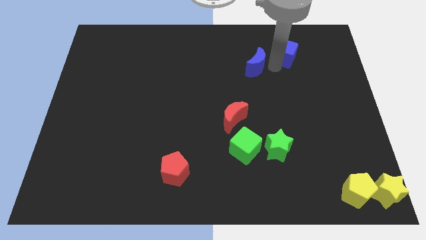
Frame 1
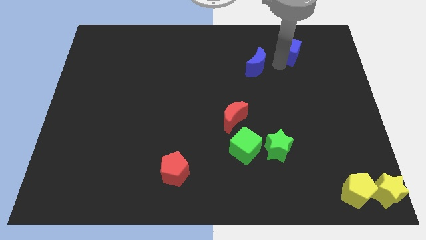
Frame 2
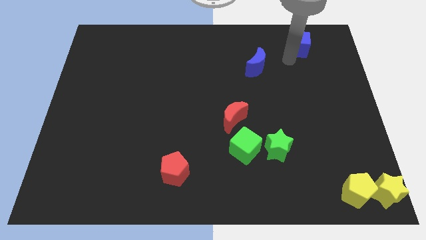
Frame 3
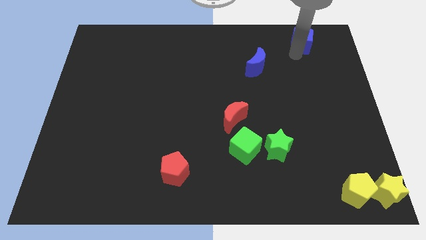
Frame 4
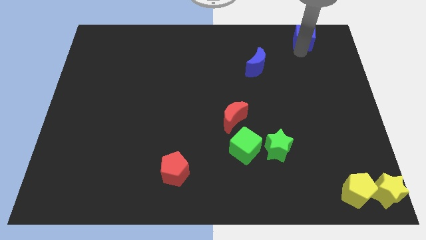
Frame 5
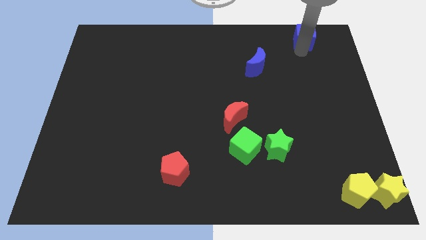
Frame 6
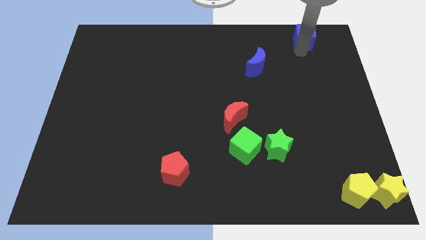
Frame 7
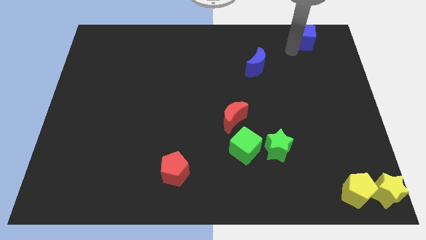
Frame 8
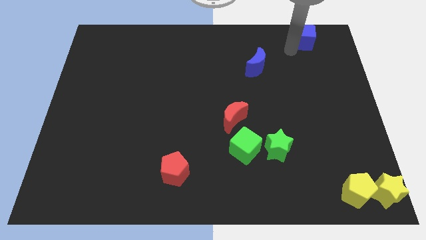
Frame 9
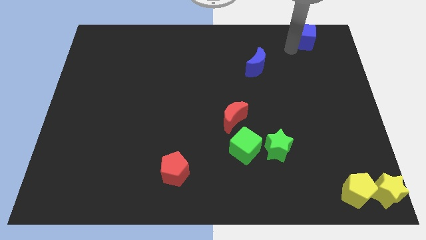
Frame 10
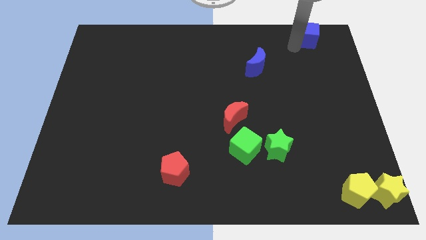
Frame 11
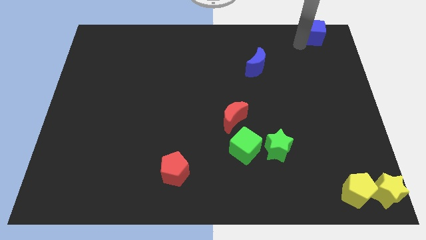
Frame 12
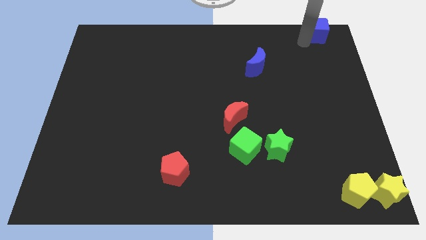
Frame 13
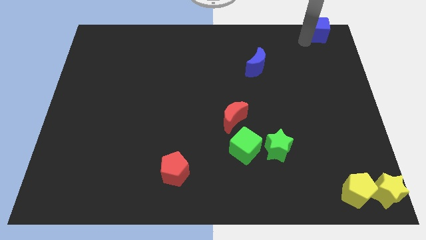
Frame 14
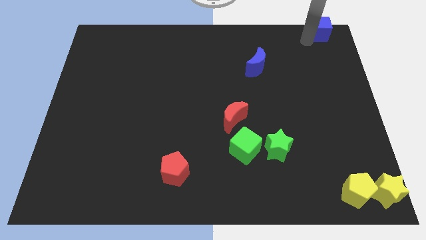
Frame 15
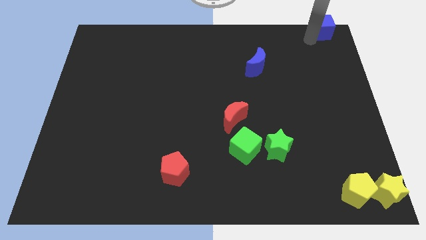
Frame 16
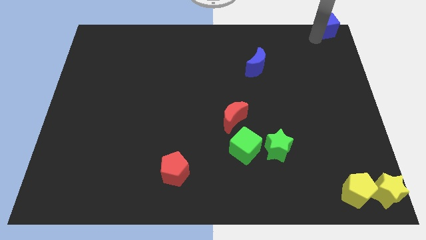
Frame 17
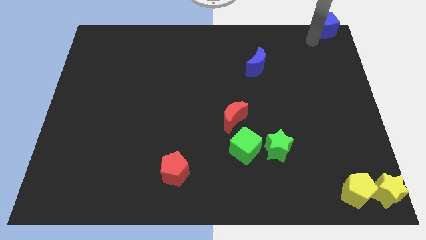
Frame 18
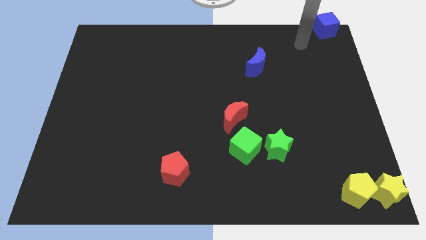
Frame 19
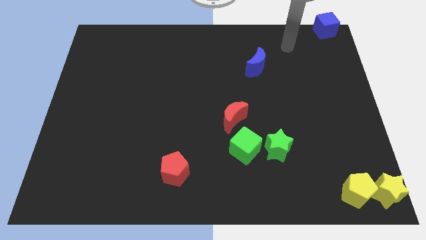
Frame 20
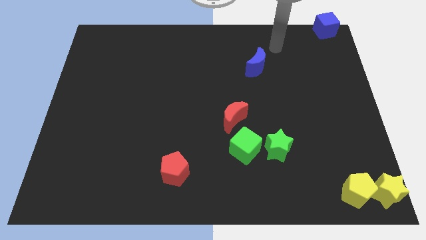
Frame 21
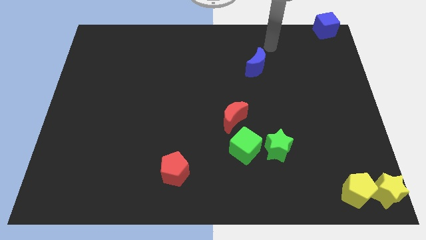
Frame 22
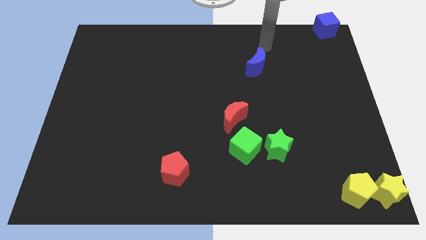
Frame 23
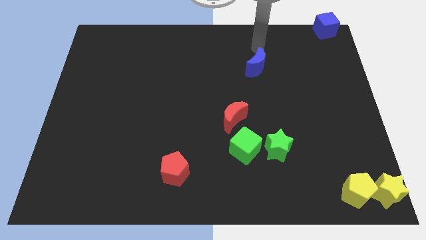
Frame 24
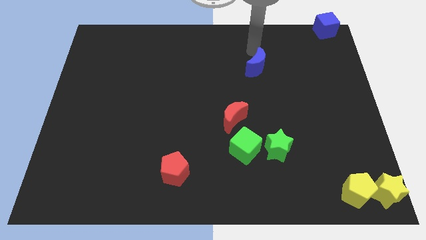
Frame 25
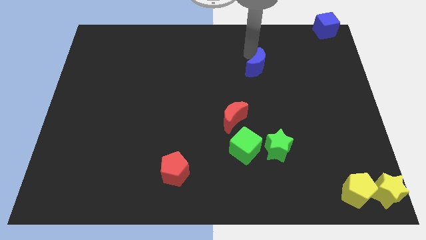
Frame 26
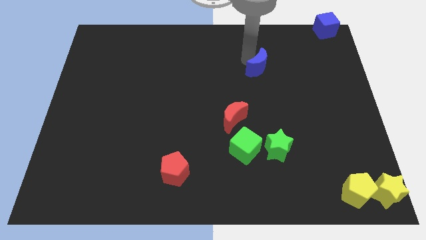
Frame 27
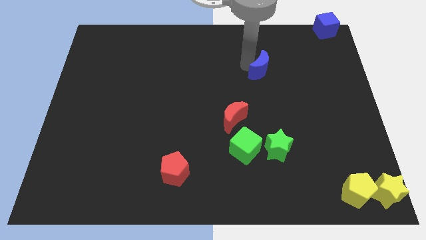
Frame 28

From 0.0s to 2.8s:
place blue cube diagonally to blue moon

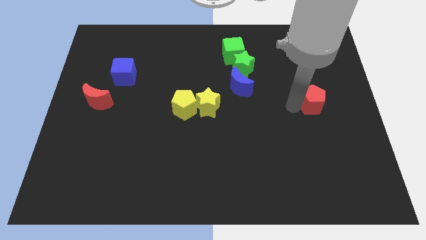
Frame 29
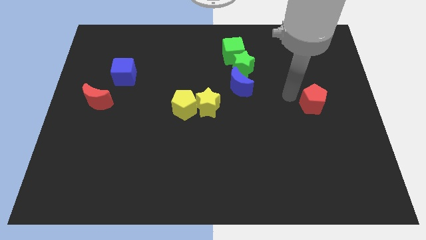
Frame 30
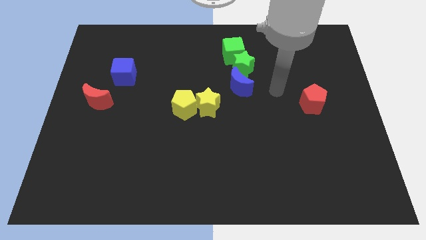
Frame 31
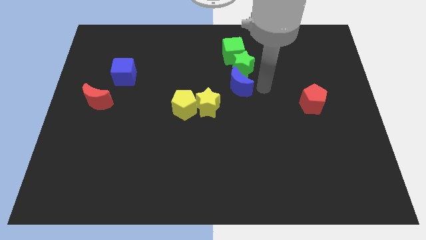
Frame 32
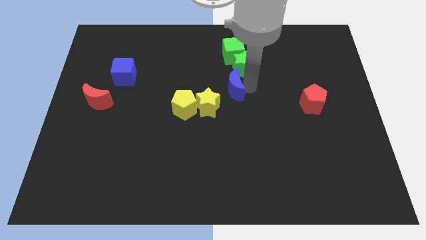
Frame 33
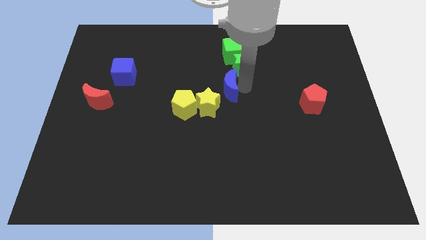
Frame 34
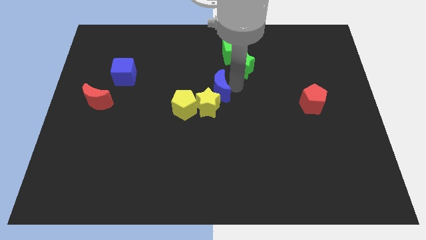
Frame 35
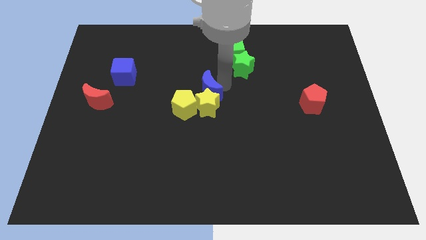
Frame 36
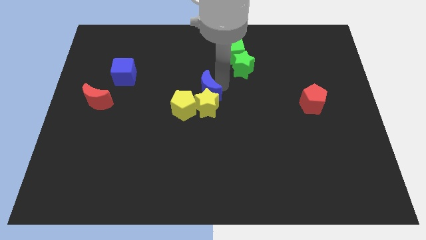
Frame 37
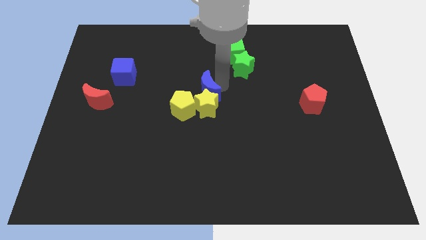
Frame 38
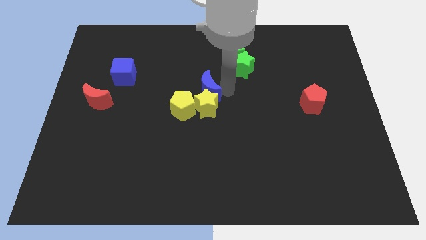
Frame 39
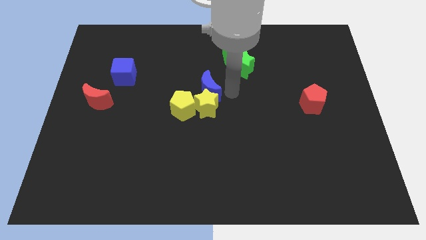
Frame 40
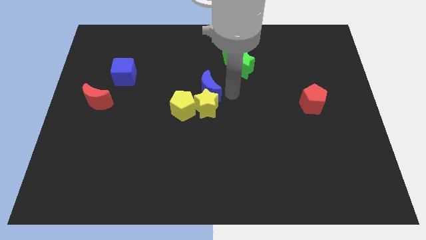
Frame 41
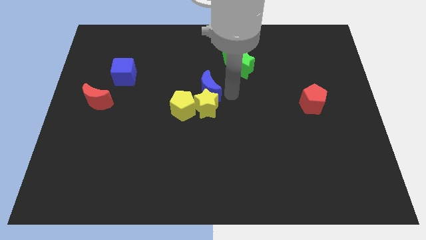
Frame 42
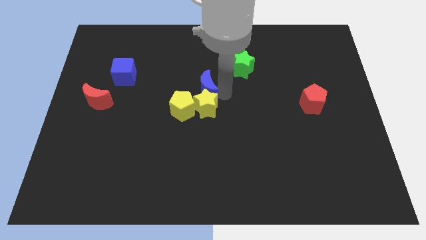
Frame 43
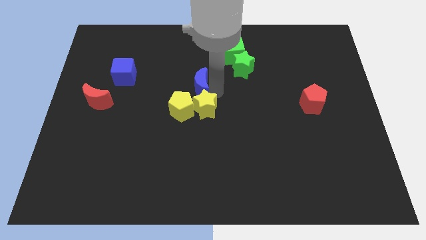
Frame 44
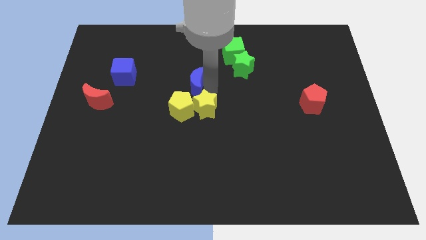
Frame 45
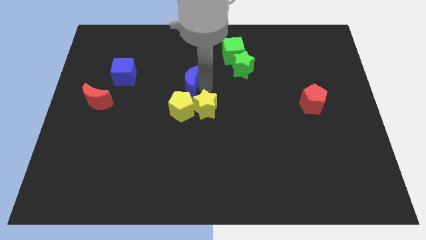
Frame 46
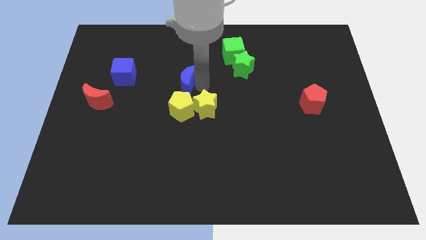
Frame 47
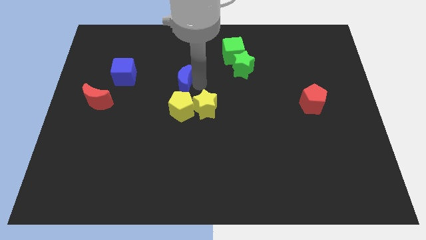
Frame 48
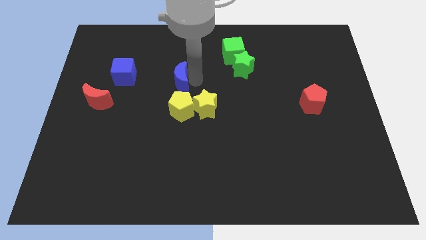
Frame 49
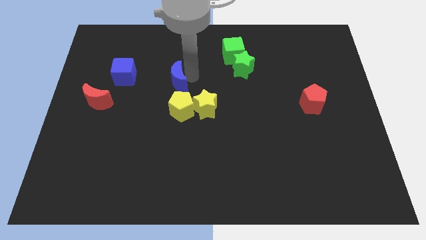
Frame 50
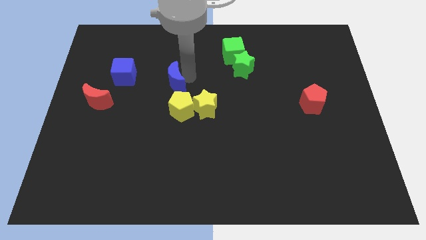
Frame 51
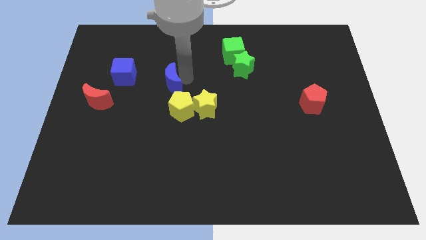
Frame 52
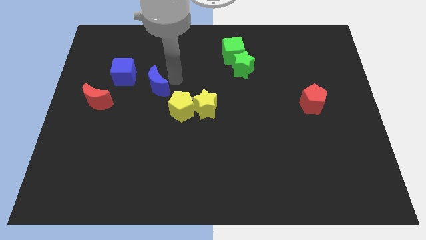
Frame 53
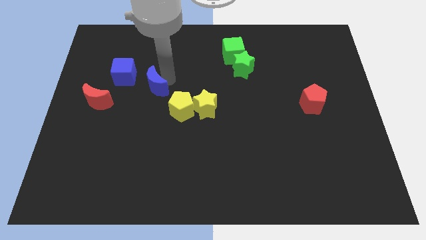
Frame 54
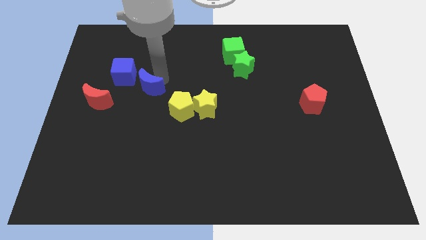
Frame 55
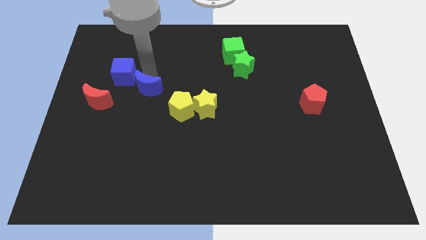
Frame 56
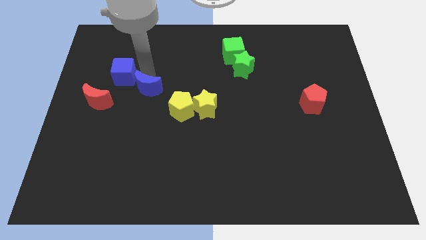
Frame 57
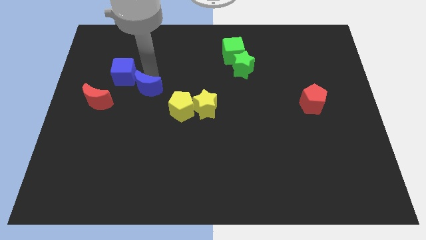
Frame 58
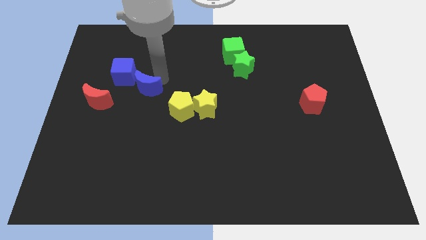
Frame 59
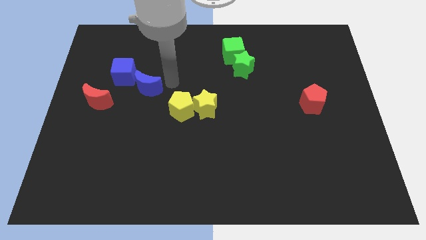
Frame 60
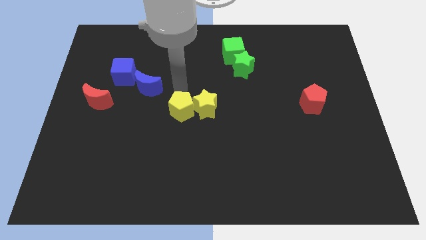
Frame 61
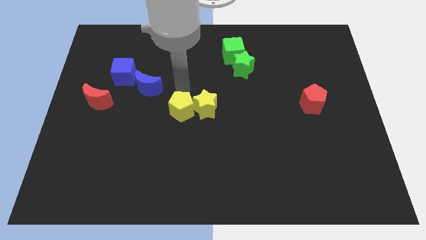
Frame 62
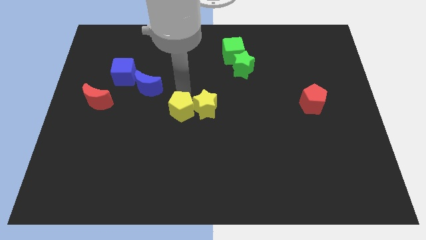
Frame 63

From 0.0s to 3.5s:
push the blue crescent to the bottom right side of the blue cube

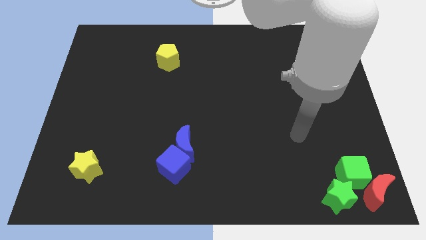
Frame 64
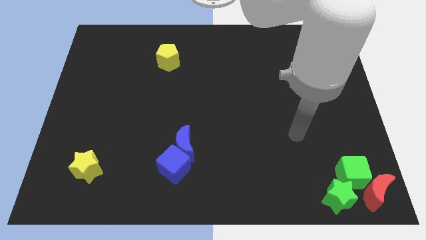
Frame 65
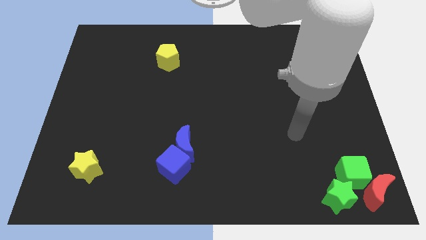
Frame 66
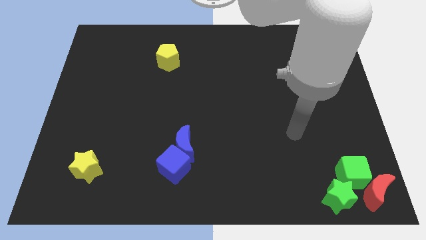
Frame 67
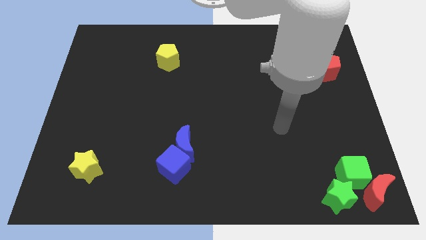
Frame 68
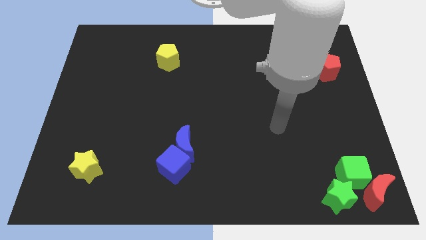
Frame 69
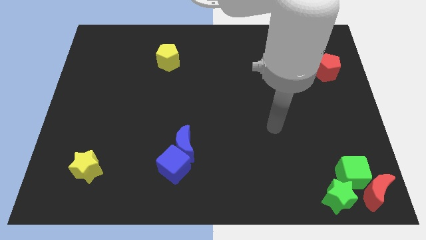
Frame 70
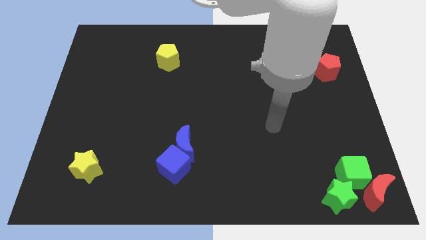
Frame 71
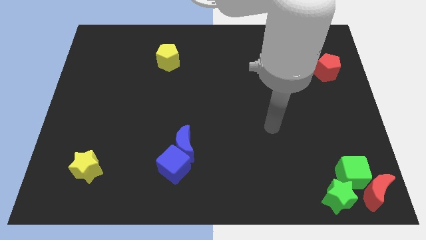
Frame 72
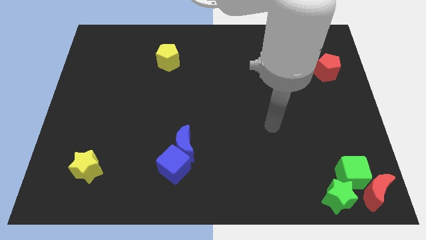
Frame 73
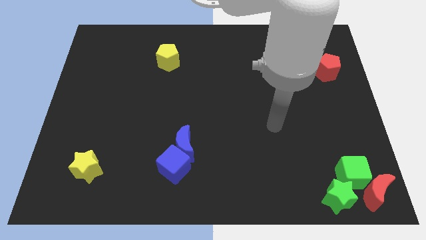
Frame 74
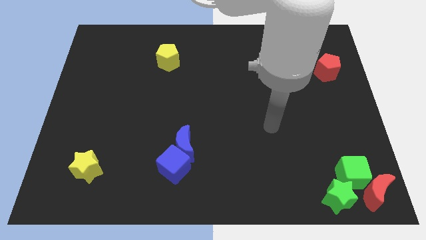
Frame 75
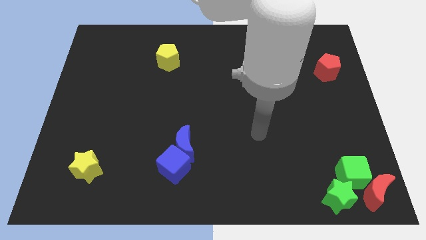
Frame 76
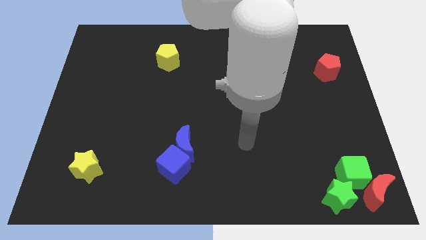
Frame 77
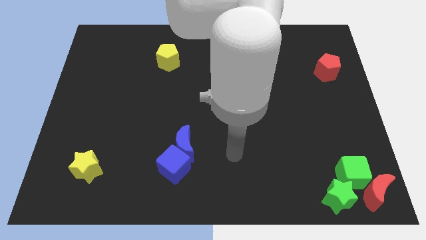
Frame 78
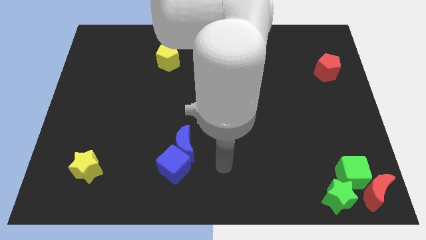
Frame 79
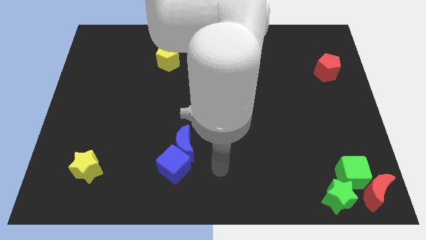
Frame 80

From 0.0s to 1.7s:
place your arm towards the bottom center

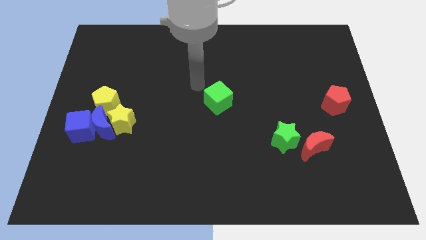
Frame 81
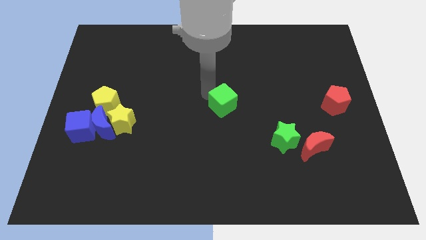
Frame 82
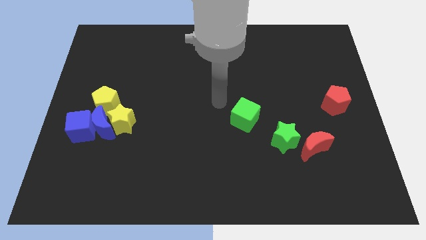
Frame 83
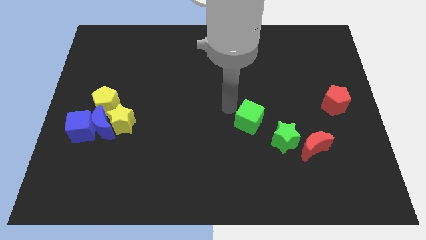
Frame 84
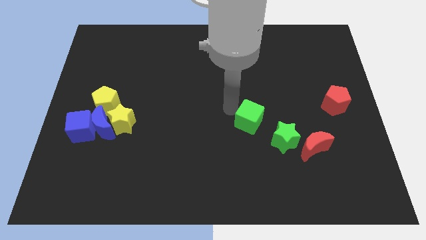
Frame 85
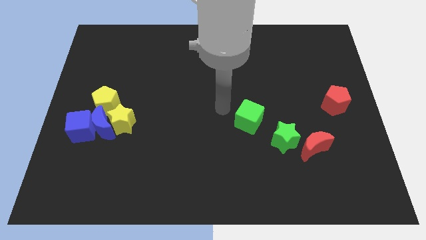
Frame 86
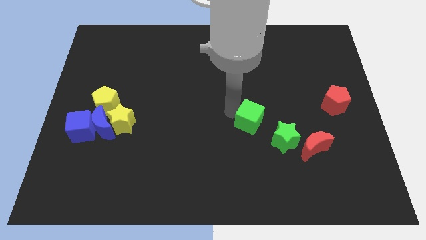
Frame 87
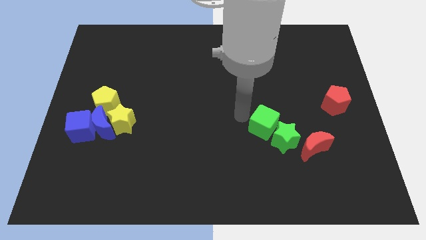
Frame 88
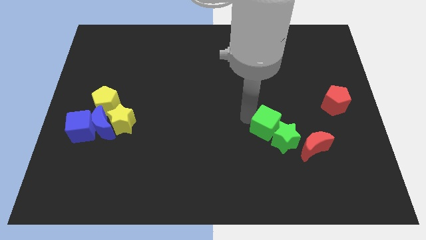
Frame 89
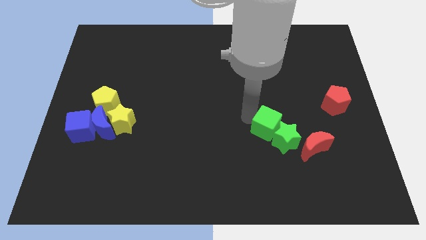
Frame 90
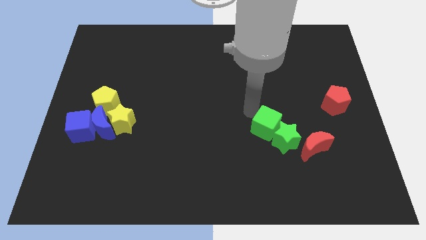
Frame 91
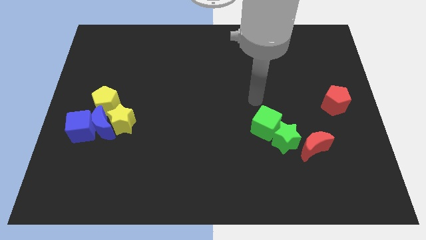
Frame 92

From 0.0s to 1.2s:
push the green cube into the green star
